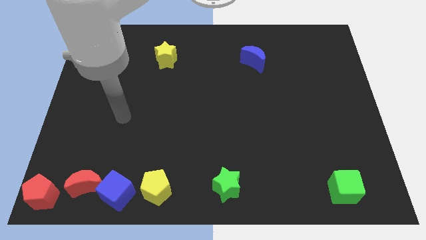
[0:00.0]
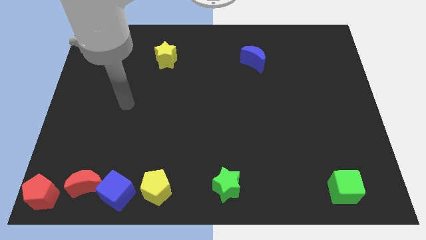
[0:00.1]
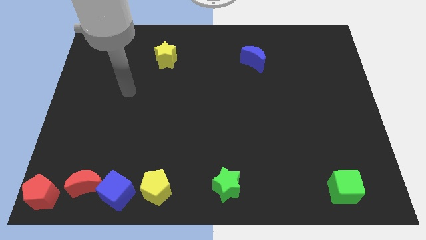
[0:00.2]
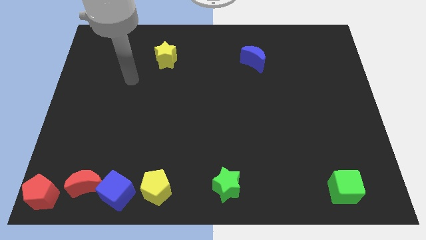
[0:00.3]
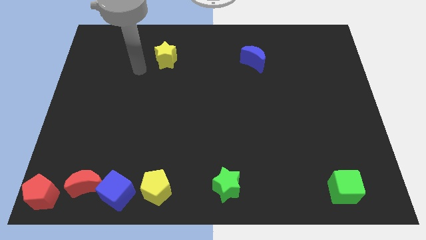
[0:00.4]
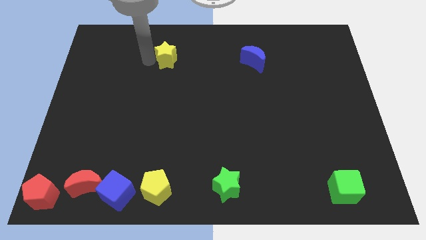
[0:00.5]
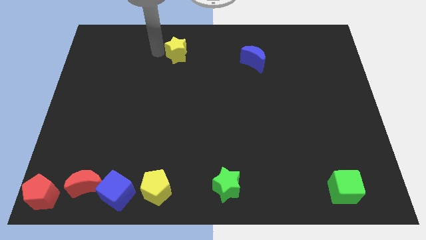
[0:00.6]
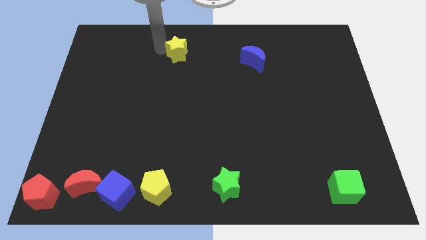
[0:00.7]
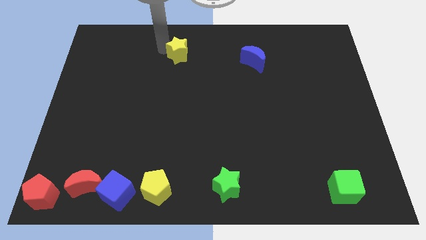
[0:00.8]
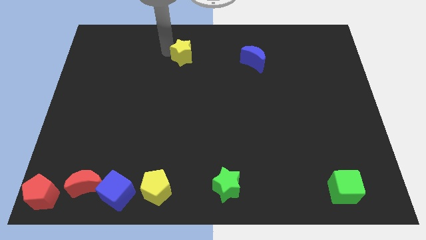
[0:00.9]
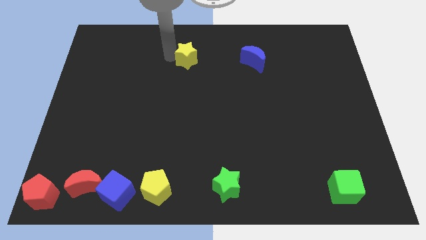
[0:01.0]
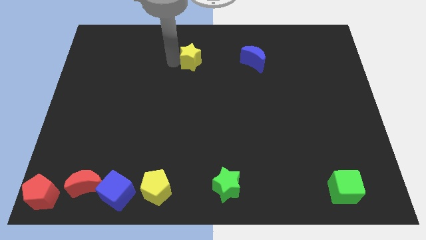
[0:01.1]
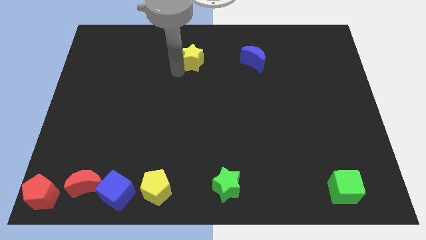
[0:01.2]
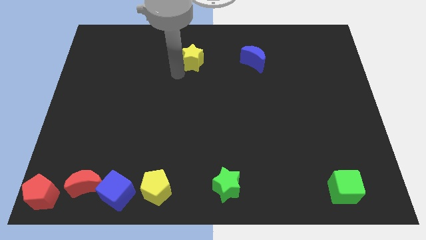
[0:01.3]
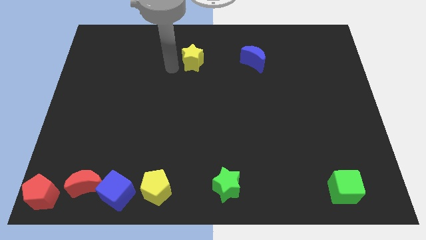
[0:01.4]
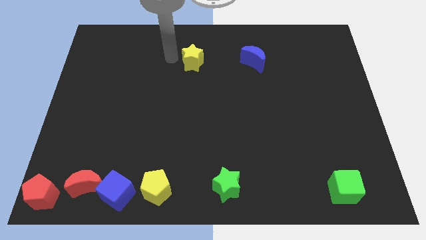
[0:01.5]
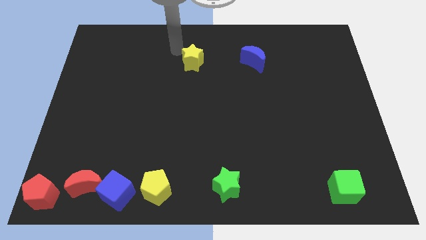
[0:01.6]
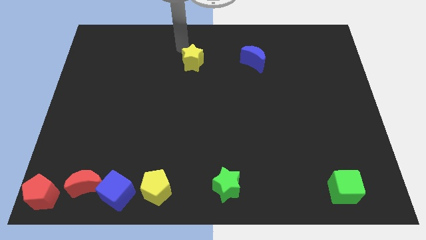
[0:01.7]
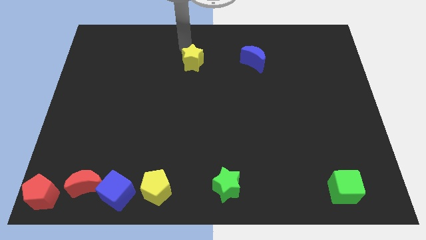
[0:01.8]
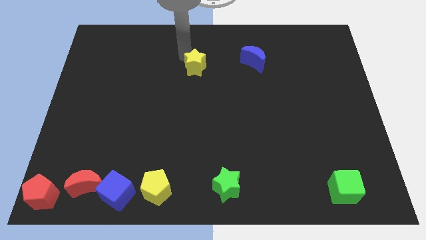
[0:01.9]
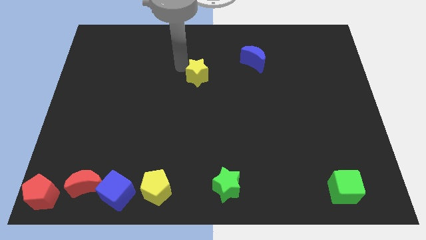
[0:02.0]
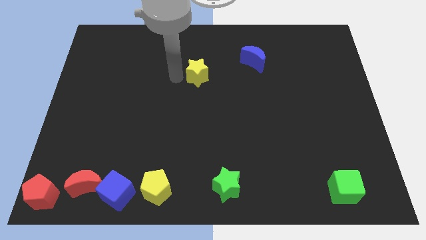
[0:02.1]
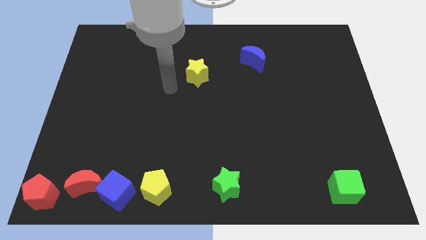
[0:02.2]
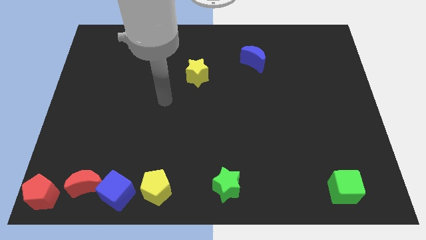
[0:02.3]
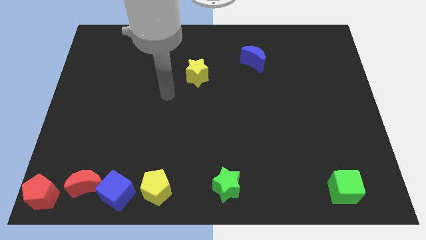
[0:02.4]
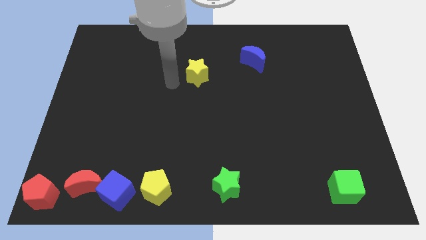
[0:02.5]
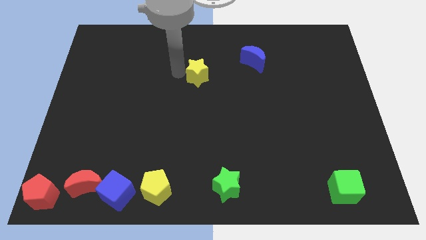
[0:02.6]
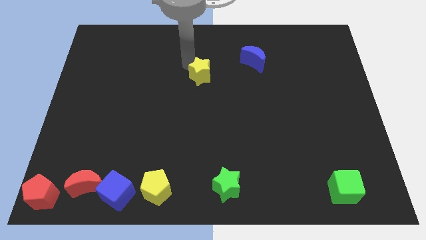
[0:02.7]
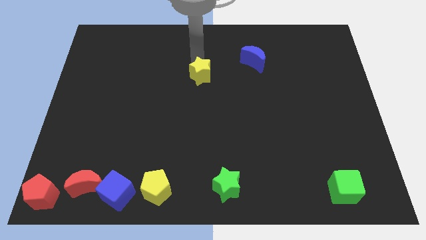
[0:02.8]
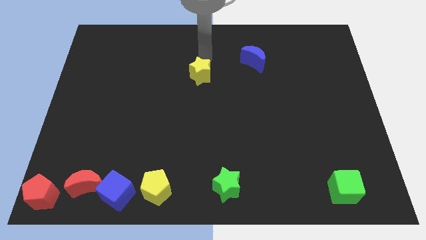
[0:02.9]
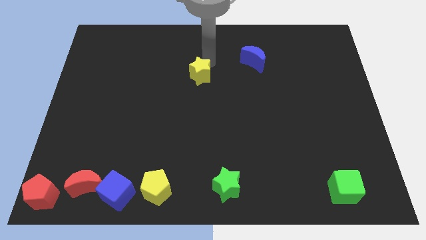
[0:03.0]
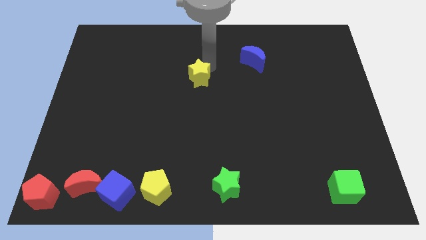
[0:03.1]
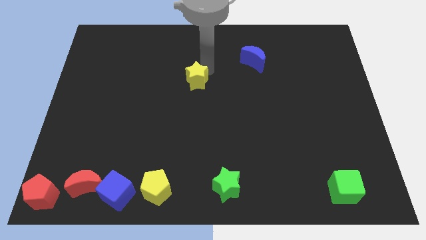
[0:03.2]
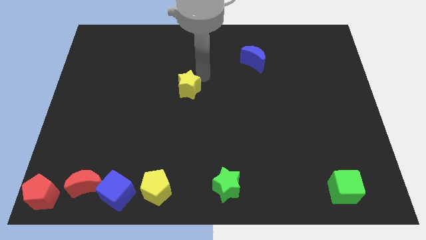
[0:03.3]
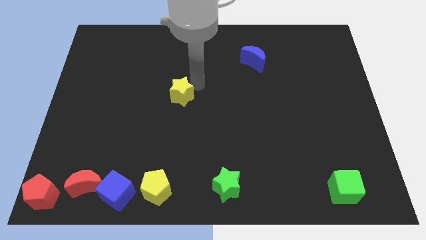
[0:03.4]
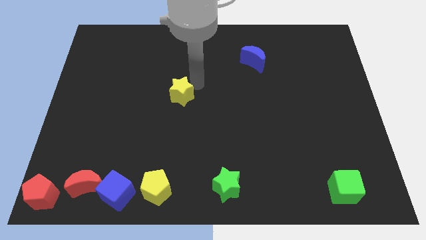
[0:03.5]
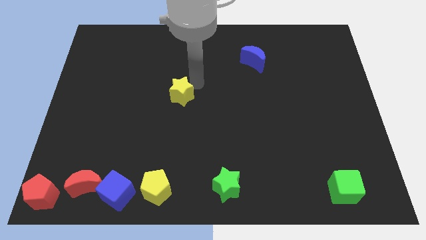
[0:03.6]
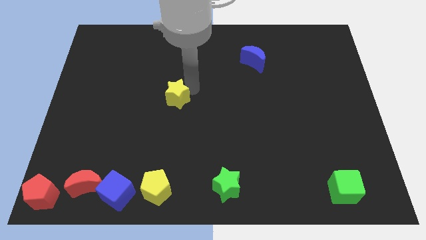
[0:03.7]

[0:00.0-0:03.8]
push the yellow star diagonally bottom left to the blue moon

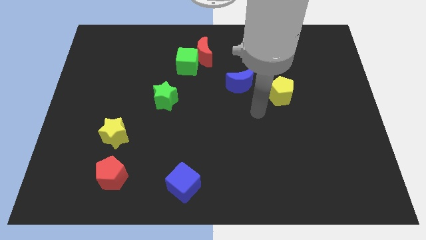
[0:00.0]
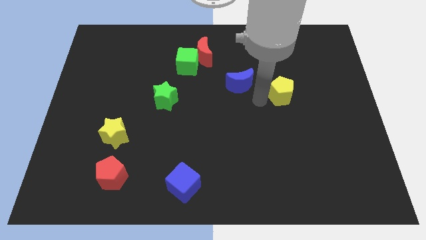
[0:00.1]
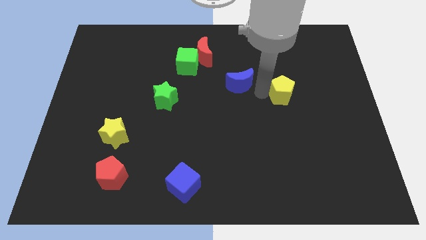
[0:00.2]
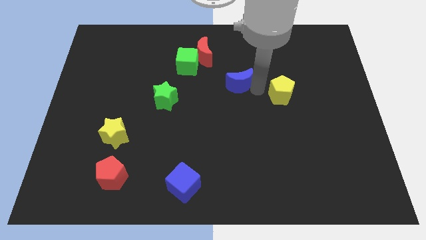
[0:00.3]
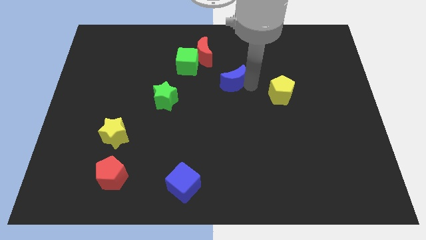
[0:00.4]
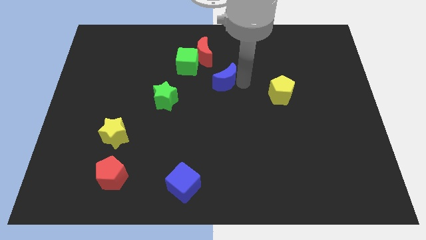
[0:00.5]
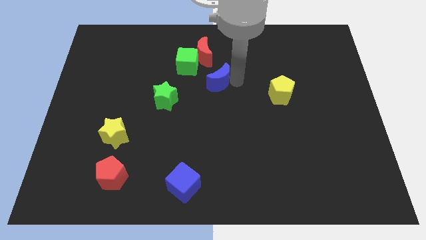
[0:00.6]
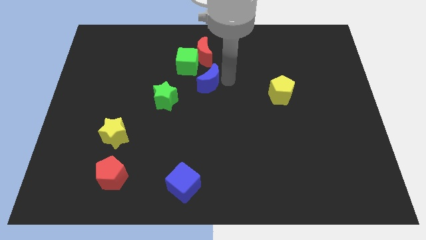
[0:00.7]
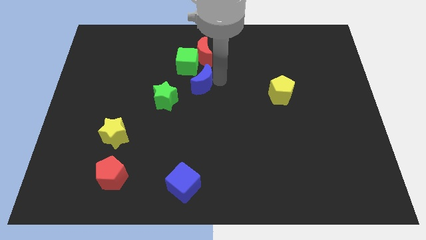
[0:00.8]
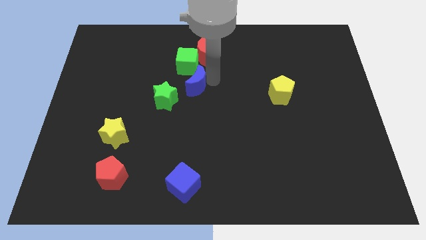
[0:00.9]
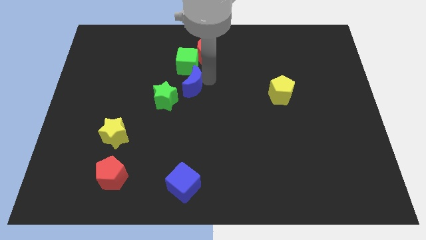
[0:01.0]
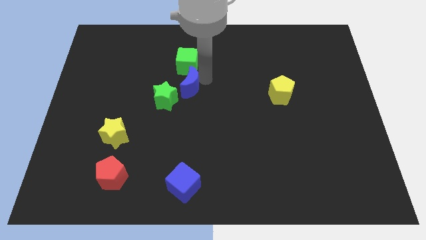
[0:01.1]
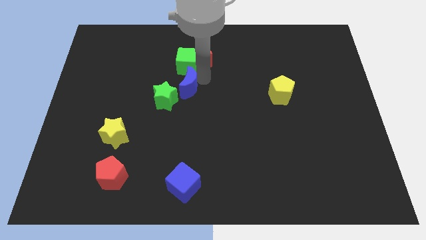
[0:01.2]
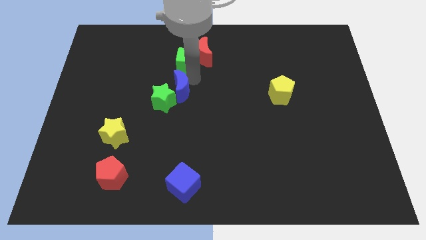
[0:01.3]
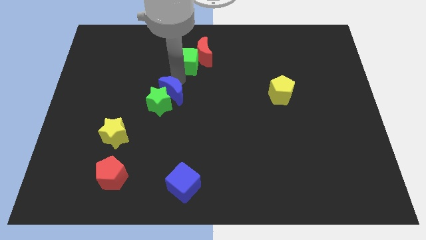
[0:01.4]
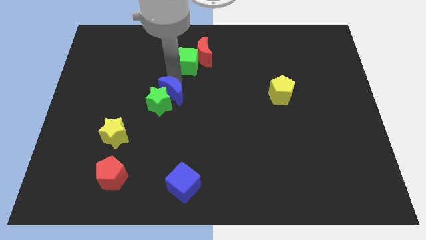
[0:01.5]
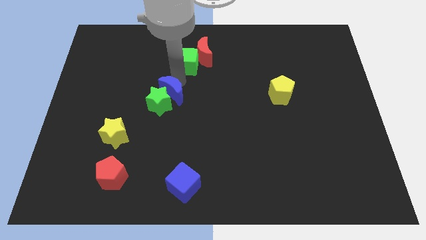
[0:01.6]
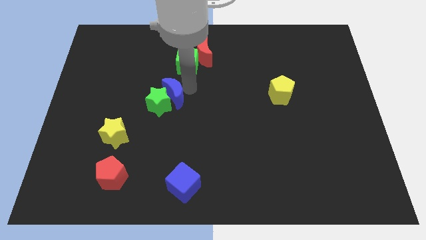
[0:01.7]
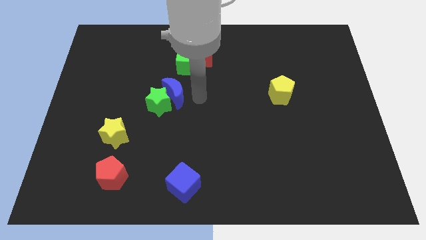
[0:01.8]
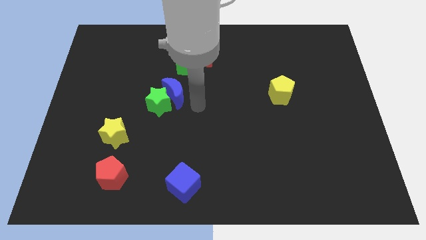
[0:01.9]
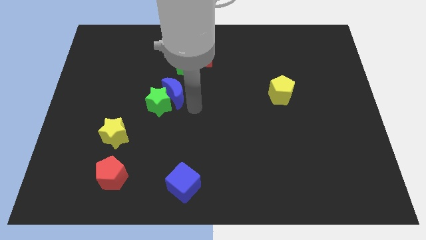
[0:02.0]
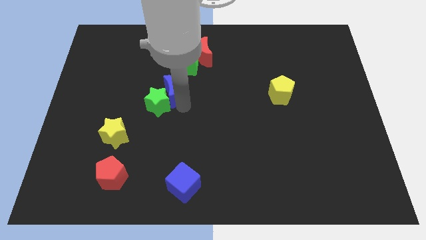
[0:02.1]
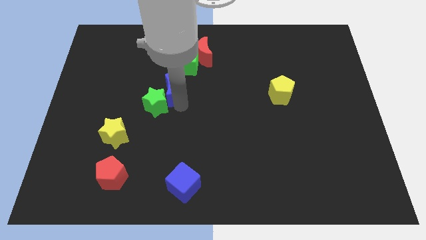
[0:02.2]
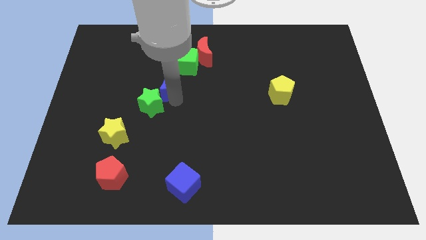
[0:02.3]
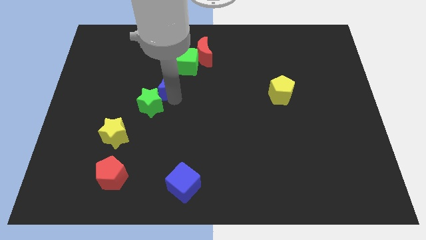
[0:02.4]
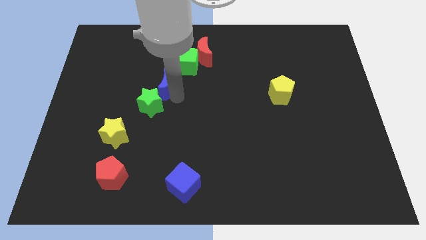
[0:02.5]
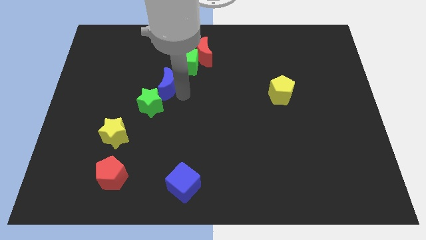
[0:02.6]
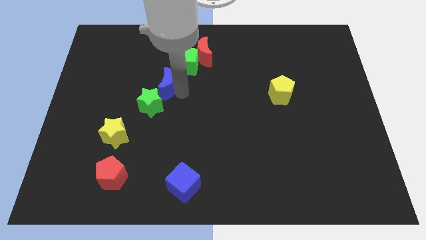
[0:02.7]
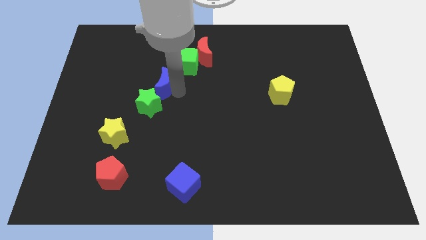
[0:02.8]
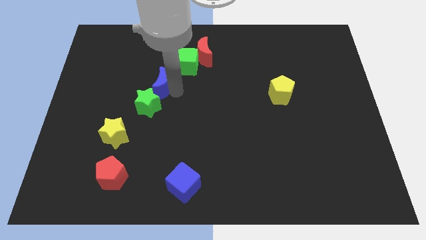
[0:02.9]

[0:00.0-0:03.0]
place blue moon between green cube and green star

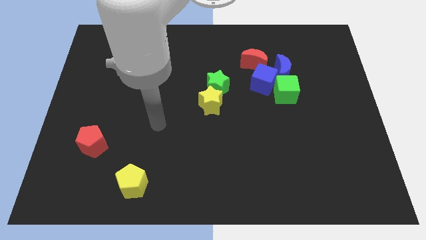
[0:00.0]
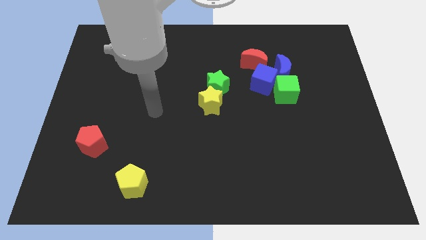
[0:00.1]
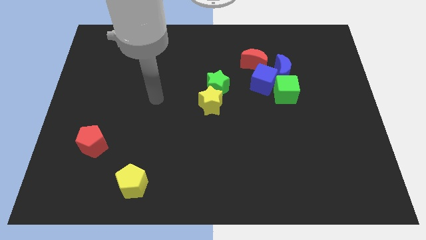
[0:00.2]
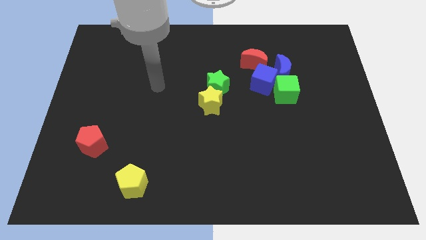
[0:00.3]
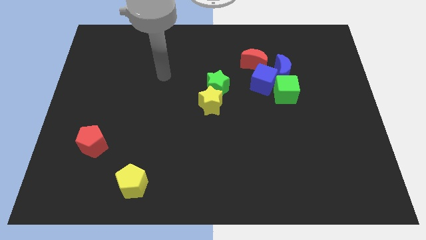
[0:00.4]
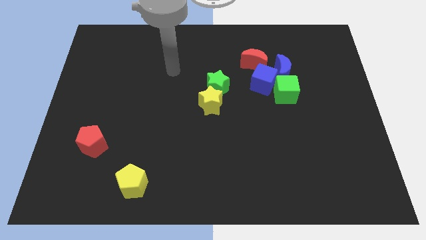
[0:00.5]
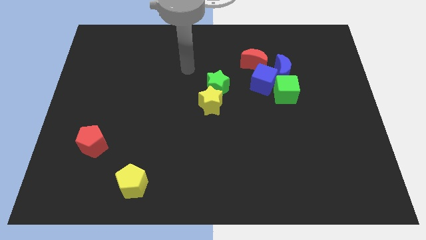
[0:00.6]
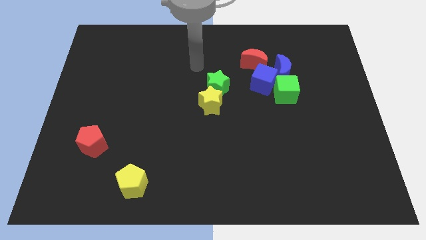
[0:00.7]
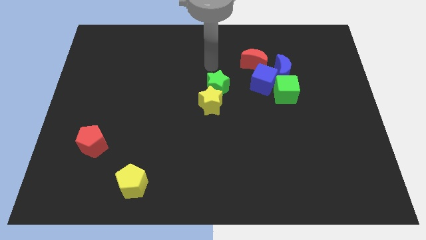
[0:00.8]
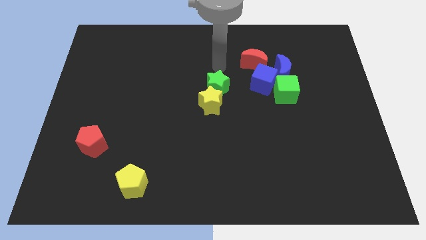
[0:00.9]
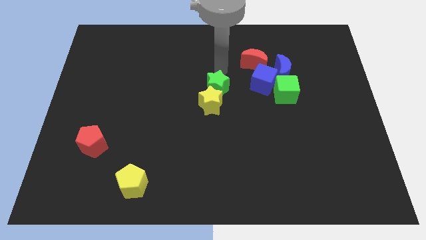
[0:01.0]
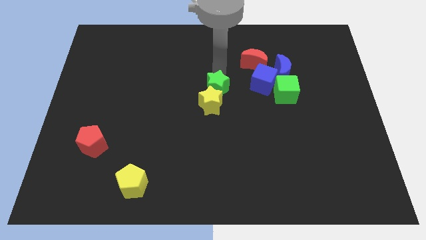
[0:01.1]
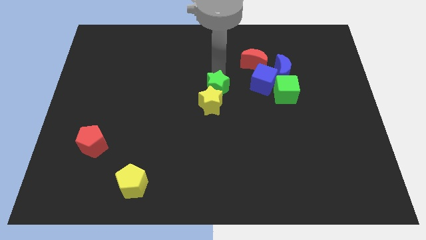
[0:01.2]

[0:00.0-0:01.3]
push arm on the top of green star

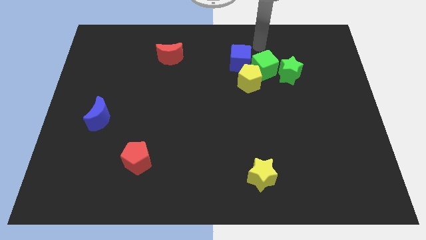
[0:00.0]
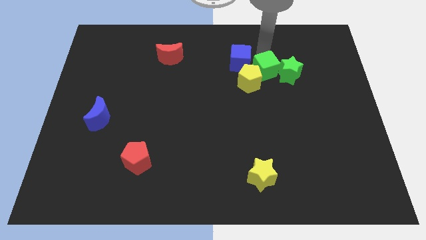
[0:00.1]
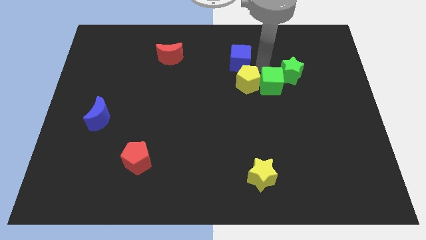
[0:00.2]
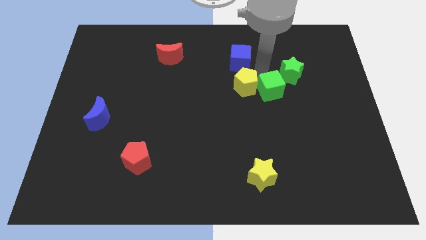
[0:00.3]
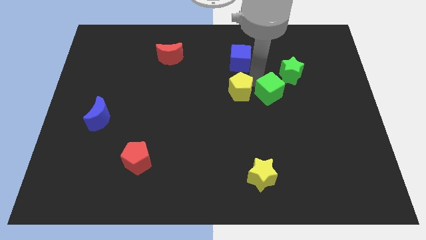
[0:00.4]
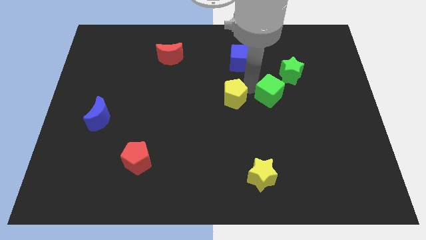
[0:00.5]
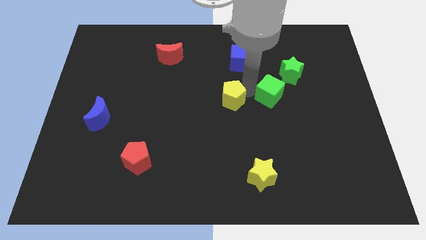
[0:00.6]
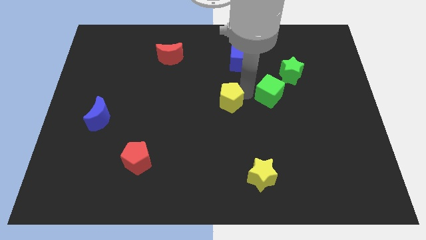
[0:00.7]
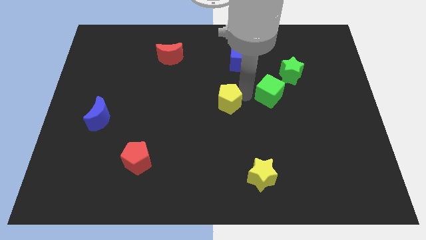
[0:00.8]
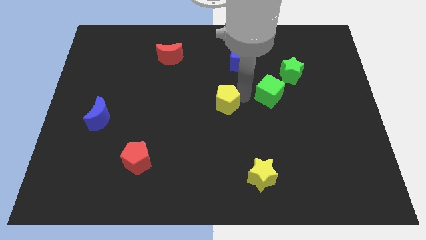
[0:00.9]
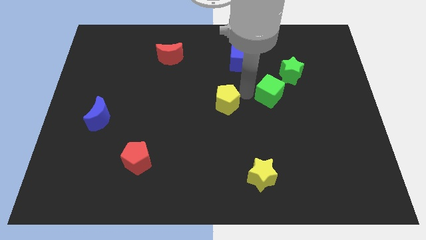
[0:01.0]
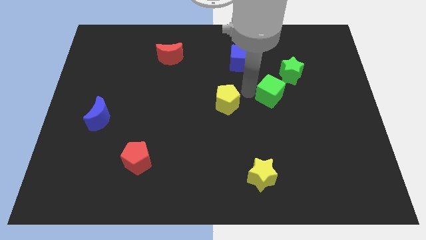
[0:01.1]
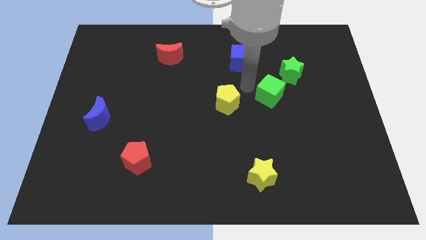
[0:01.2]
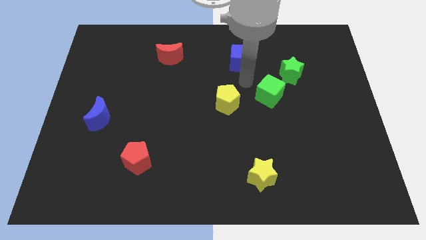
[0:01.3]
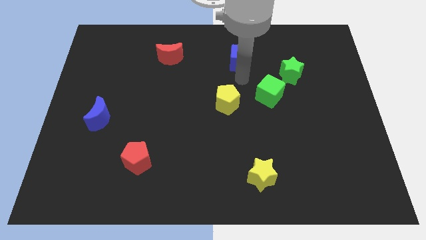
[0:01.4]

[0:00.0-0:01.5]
separate yellow pentagon and green cube
